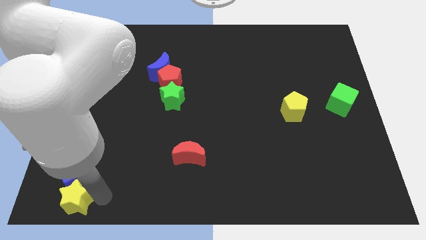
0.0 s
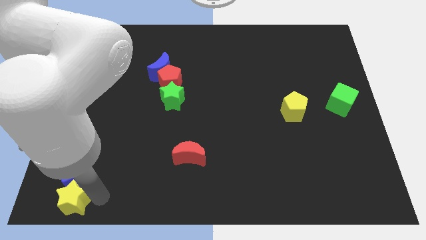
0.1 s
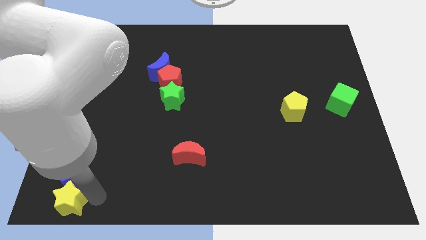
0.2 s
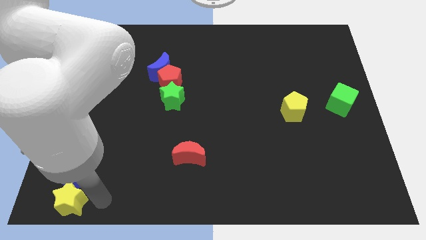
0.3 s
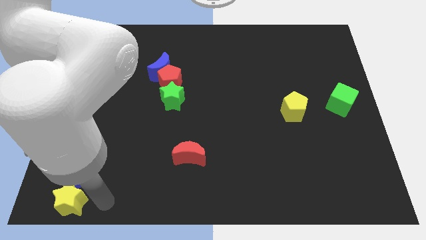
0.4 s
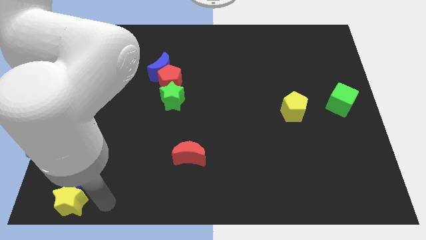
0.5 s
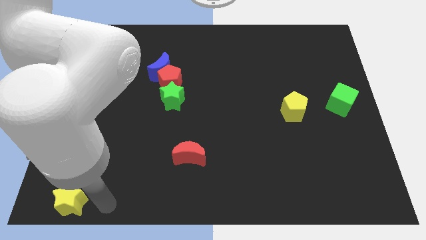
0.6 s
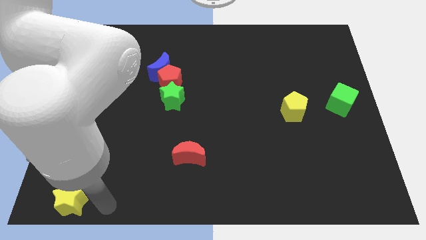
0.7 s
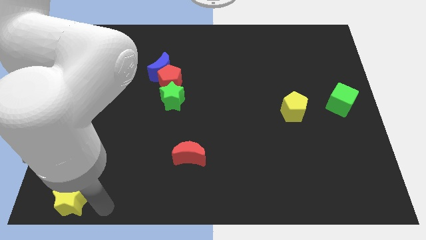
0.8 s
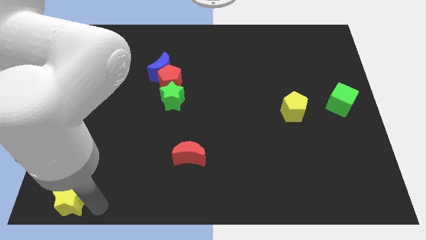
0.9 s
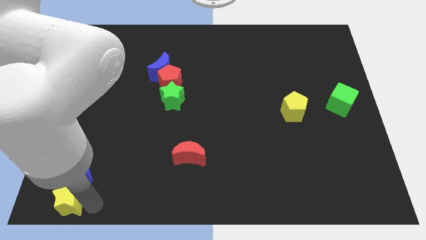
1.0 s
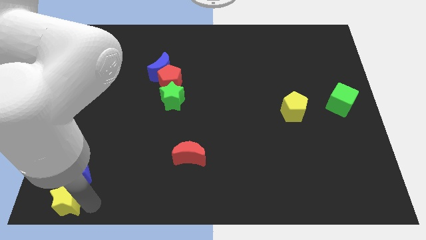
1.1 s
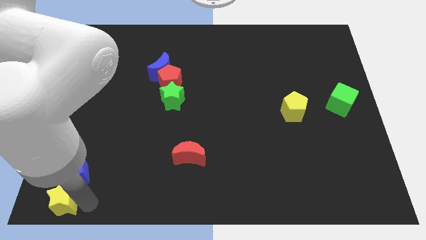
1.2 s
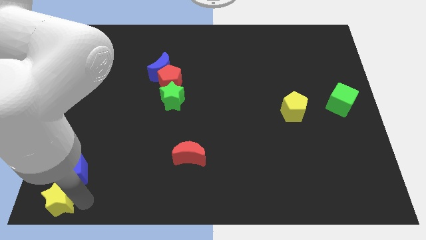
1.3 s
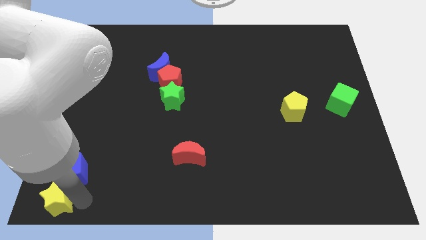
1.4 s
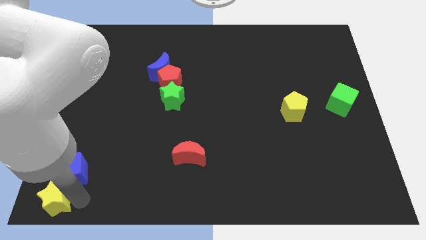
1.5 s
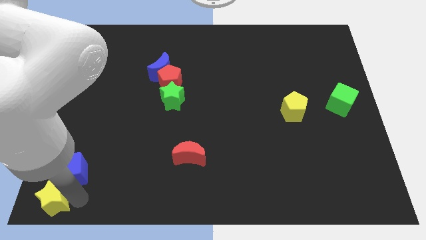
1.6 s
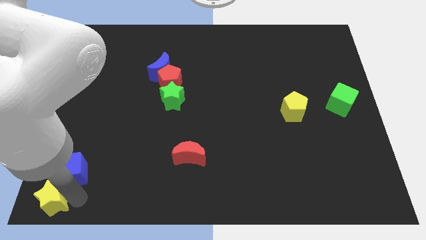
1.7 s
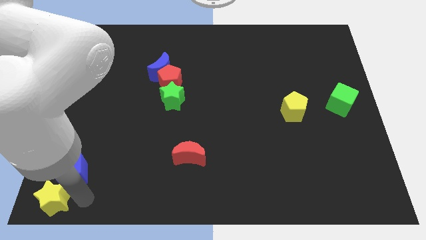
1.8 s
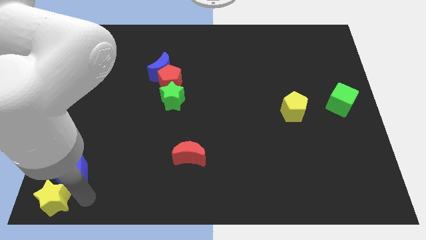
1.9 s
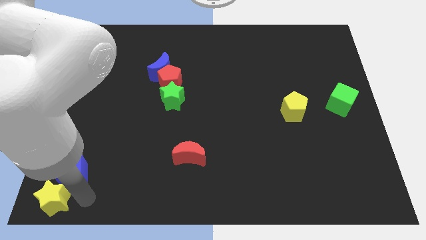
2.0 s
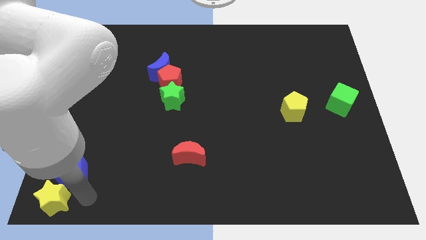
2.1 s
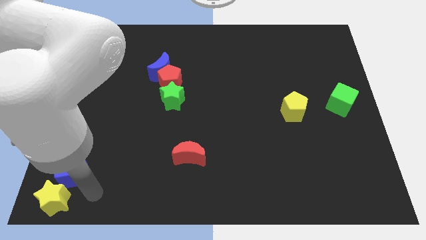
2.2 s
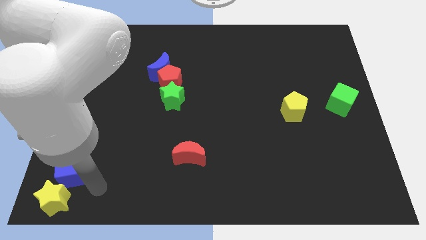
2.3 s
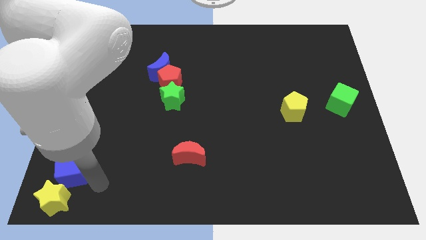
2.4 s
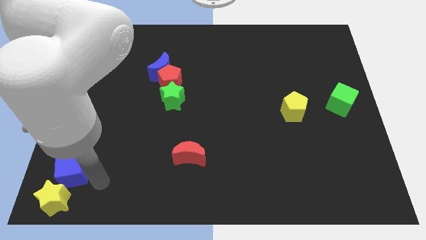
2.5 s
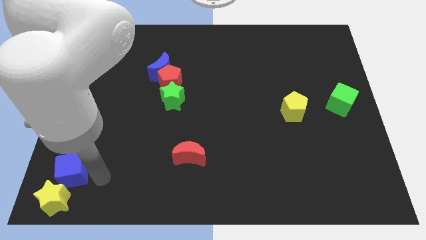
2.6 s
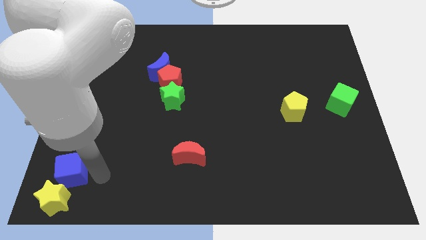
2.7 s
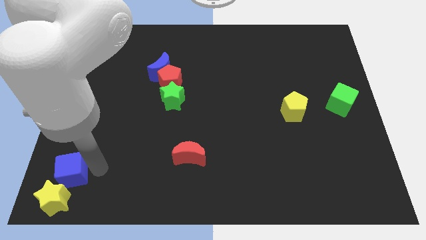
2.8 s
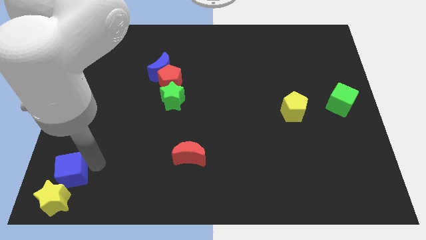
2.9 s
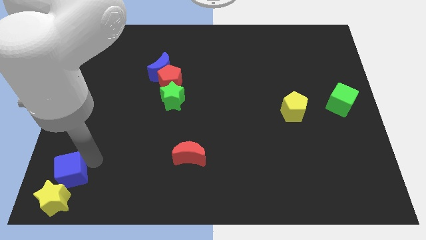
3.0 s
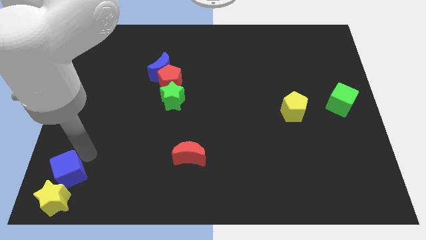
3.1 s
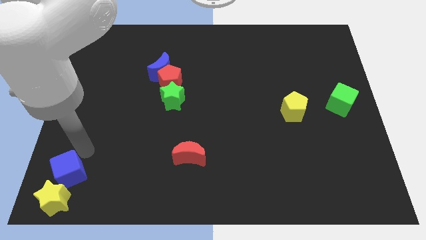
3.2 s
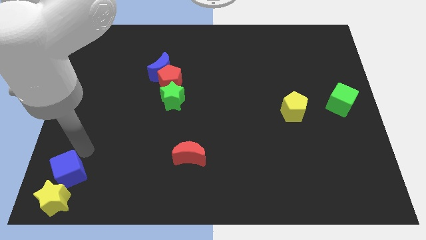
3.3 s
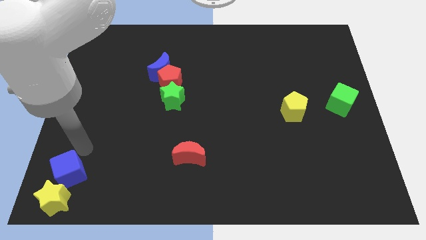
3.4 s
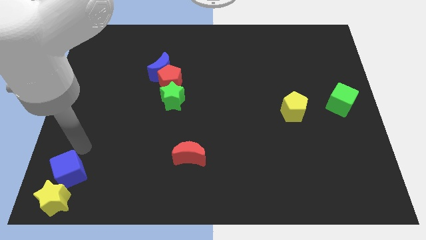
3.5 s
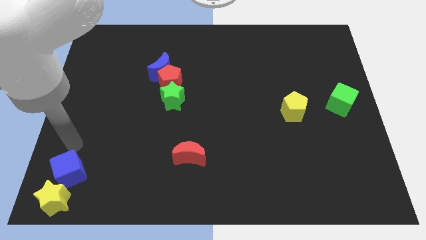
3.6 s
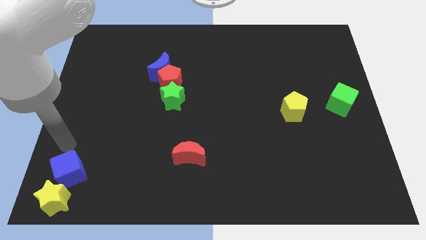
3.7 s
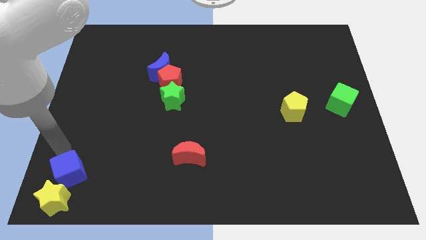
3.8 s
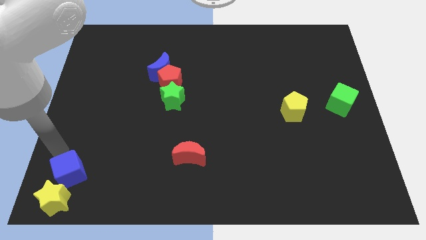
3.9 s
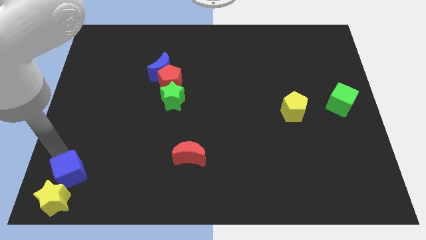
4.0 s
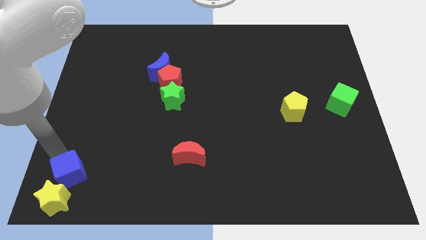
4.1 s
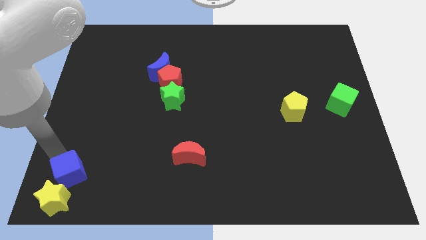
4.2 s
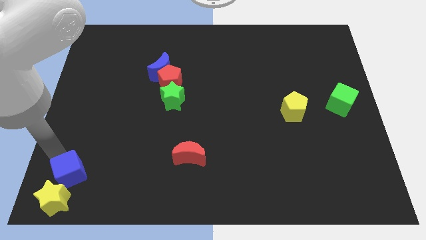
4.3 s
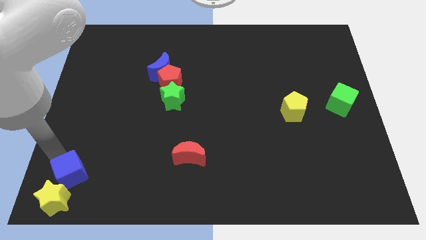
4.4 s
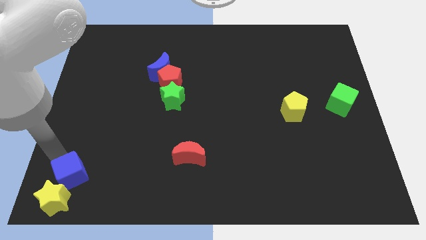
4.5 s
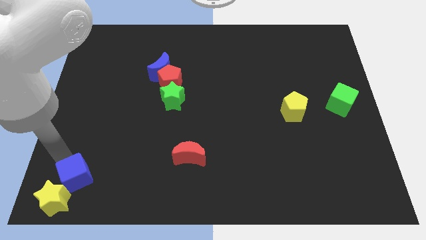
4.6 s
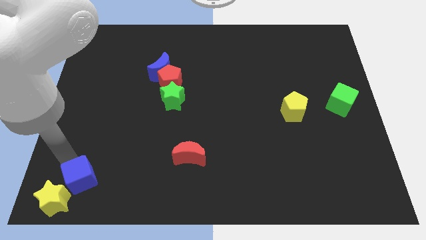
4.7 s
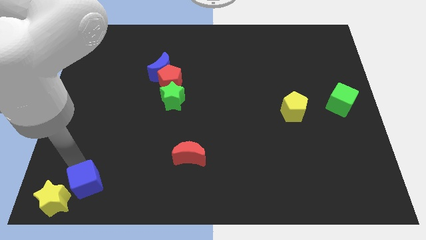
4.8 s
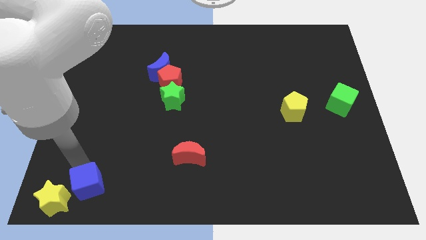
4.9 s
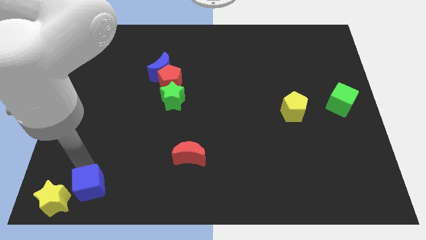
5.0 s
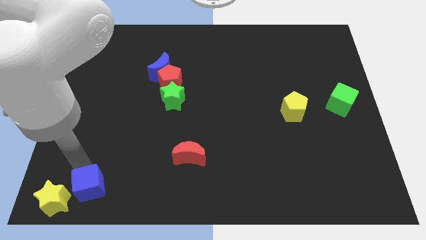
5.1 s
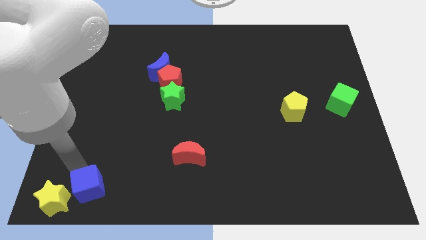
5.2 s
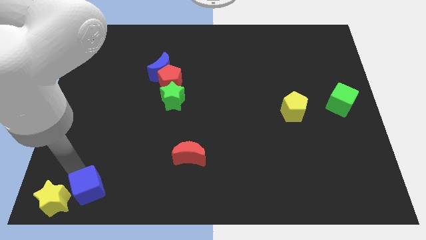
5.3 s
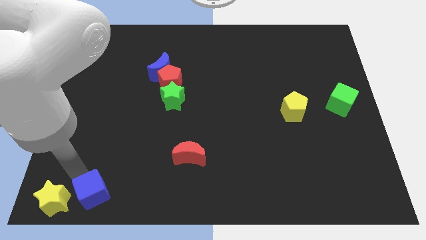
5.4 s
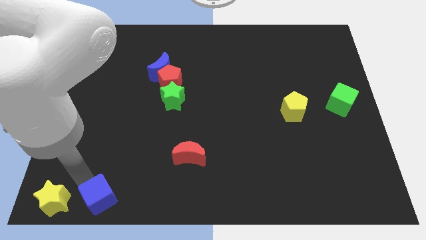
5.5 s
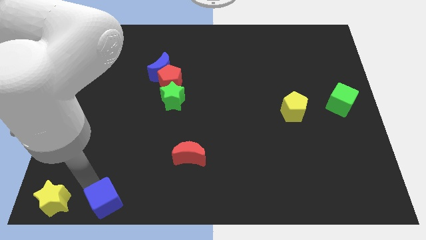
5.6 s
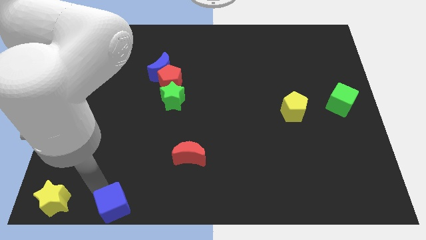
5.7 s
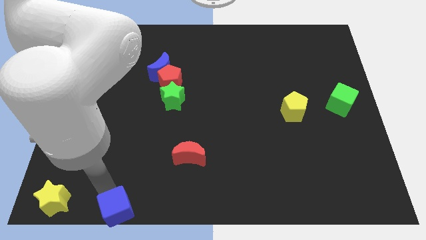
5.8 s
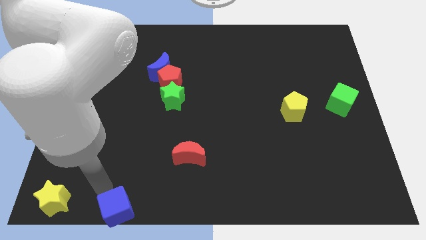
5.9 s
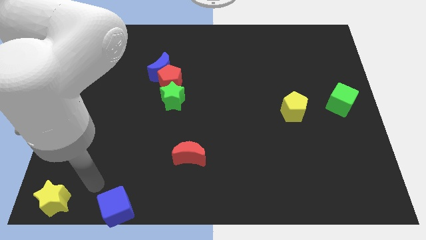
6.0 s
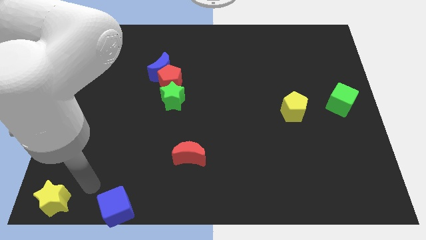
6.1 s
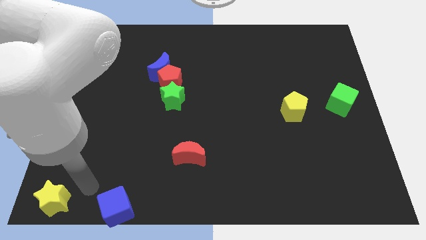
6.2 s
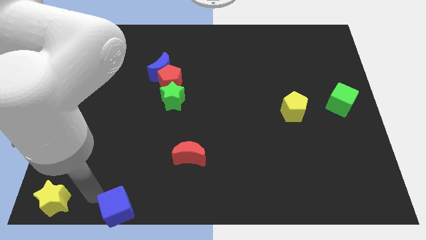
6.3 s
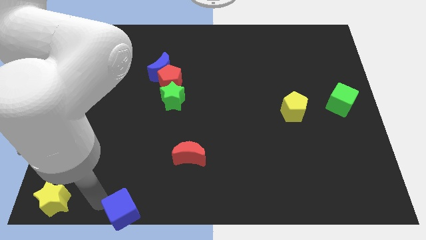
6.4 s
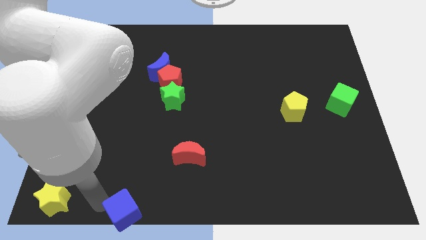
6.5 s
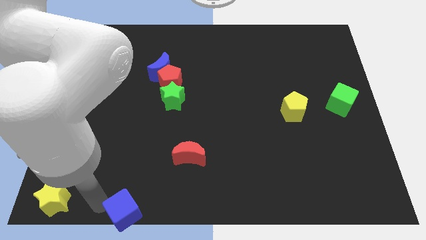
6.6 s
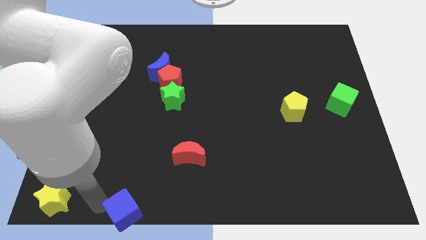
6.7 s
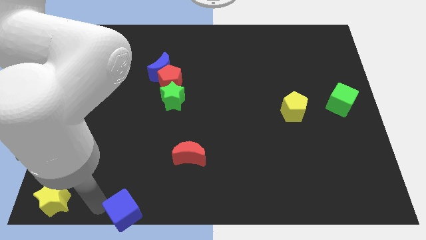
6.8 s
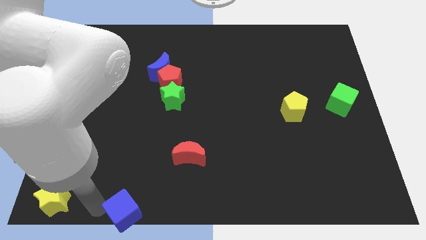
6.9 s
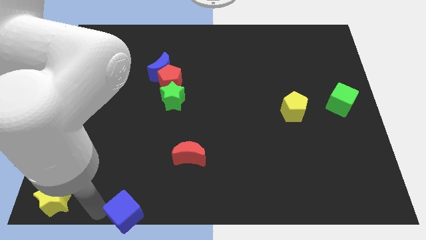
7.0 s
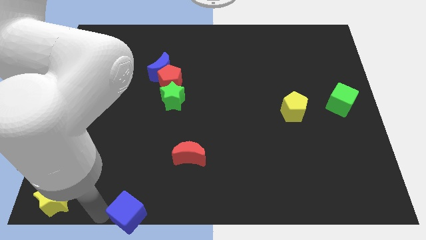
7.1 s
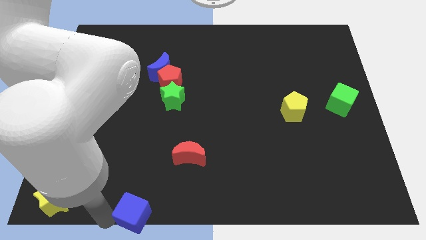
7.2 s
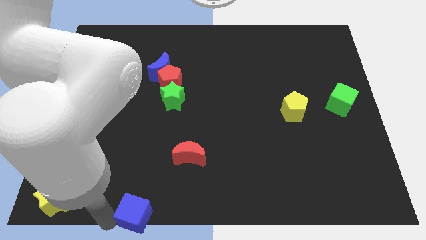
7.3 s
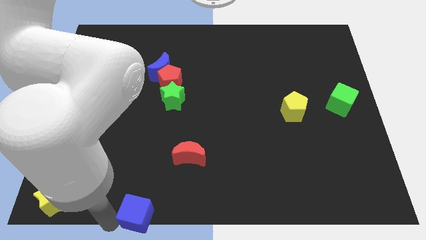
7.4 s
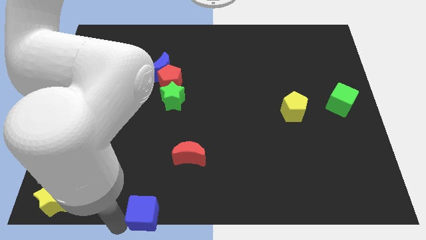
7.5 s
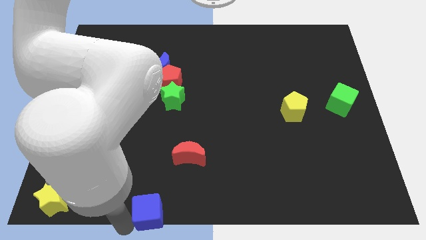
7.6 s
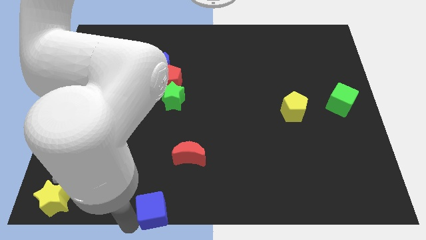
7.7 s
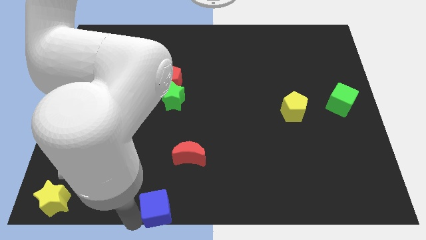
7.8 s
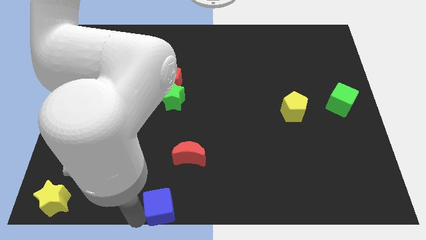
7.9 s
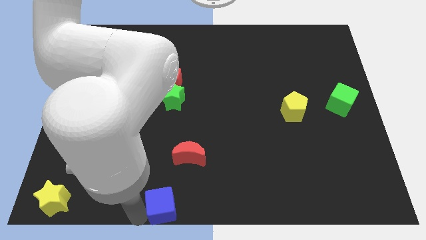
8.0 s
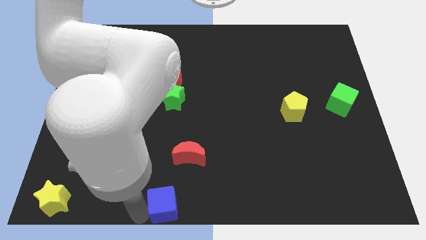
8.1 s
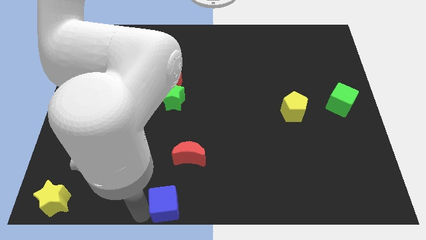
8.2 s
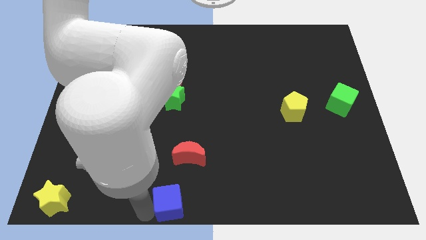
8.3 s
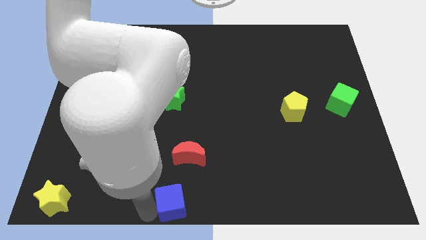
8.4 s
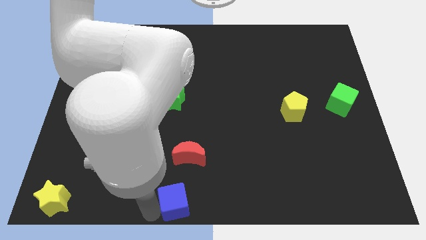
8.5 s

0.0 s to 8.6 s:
separate blue cube from the yellow star

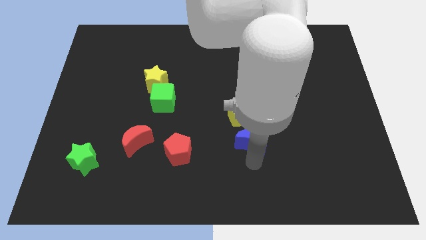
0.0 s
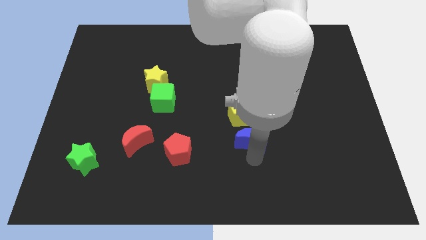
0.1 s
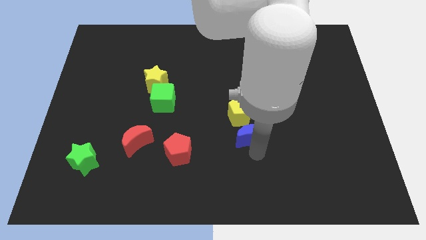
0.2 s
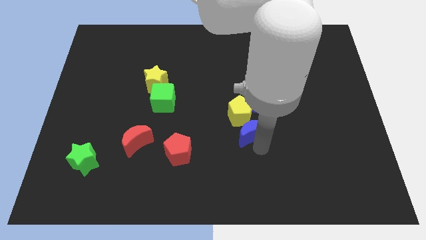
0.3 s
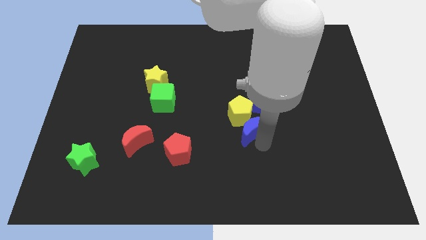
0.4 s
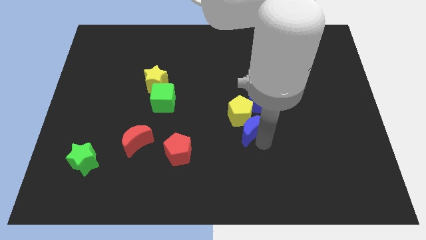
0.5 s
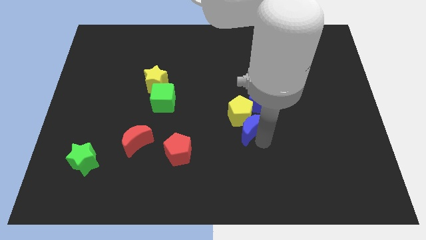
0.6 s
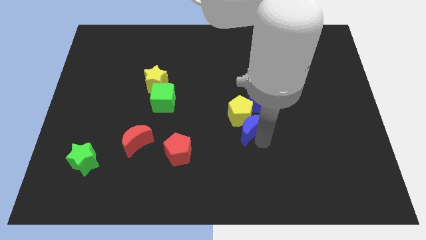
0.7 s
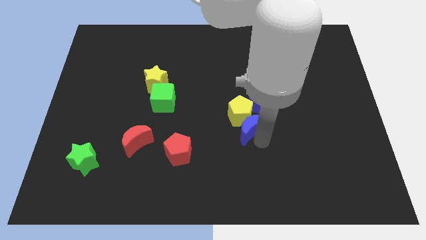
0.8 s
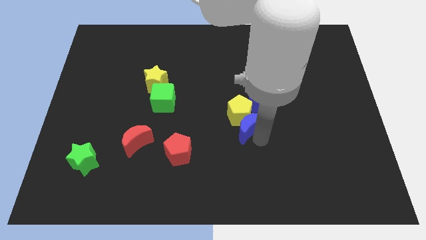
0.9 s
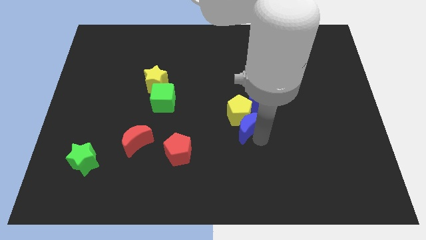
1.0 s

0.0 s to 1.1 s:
place the blue crescent at the bottom right of the yellow pentagon
